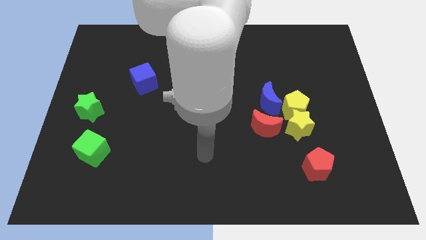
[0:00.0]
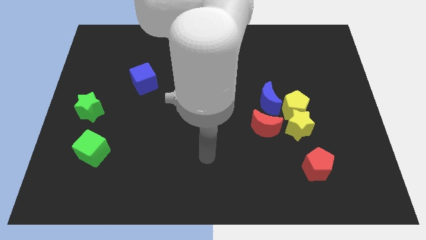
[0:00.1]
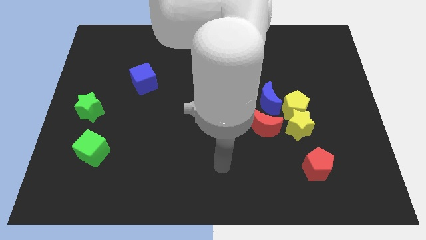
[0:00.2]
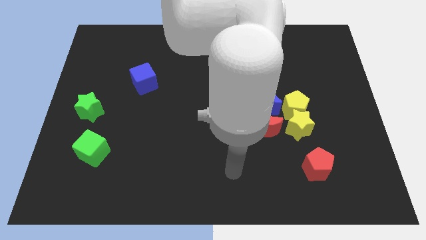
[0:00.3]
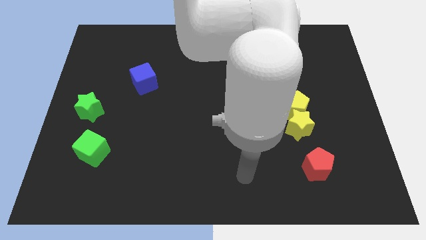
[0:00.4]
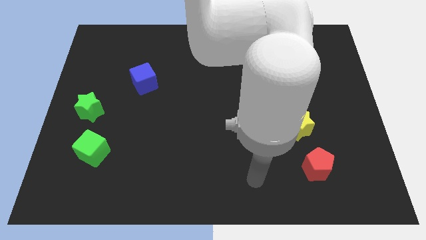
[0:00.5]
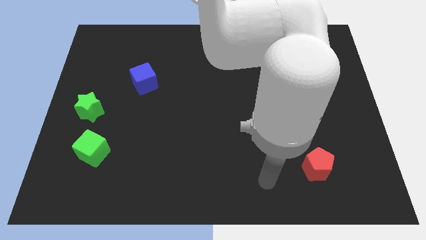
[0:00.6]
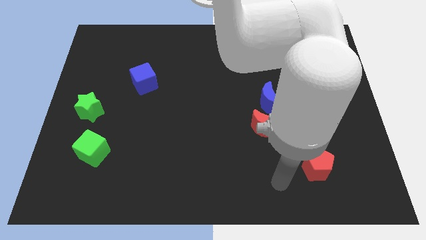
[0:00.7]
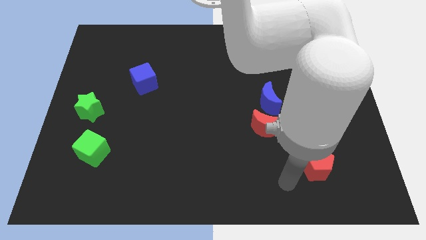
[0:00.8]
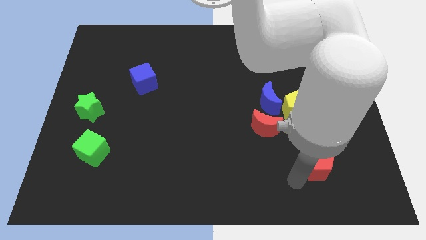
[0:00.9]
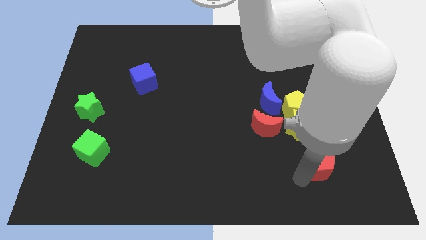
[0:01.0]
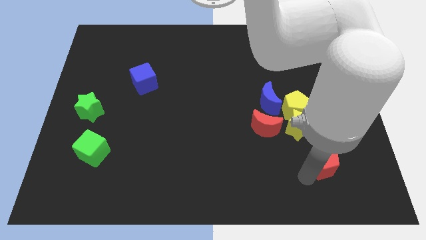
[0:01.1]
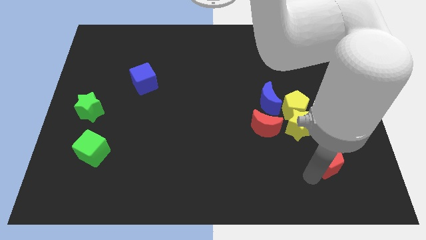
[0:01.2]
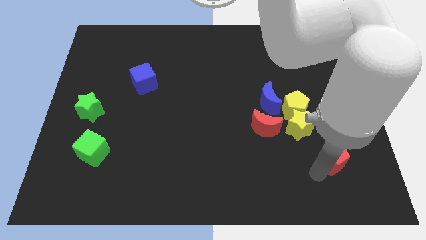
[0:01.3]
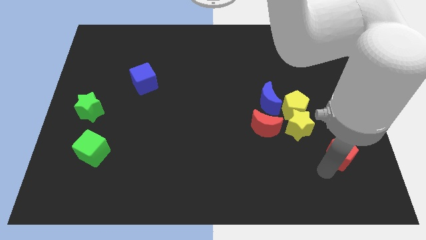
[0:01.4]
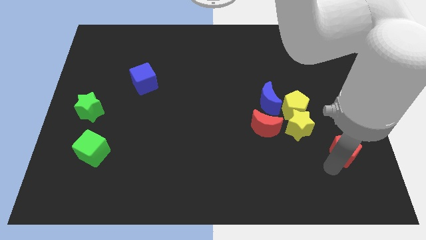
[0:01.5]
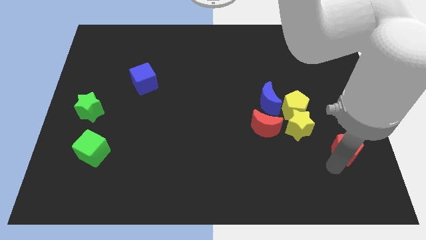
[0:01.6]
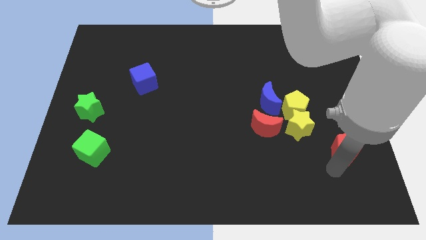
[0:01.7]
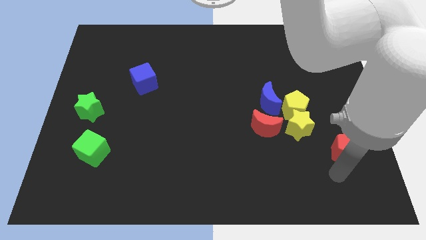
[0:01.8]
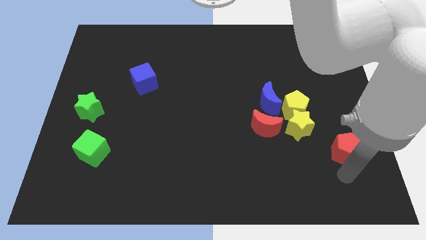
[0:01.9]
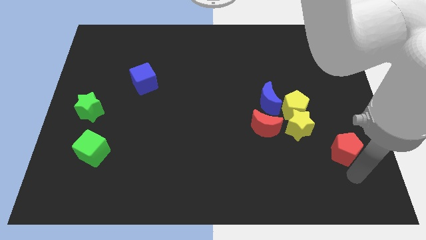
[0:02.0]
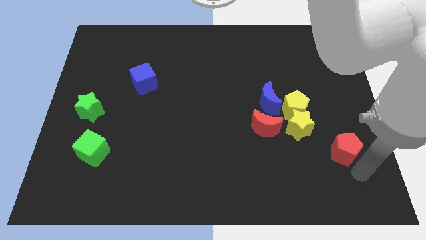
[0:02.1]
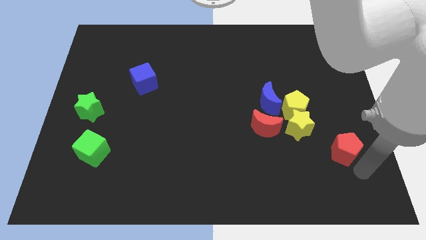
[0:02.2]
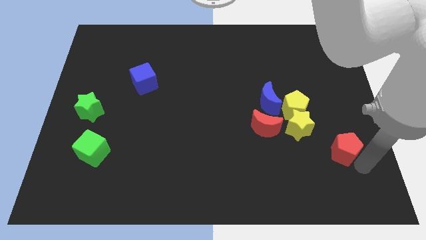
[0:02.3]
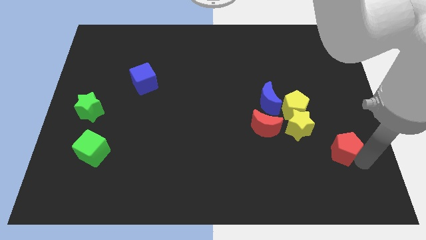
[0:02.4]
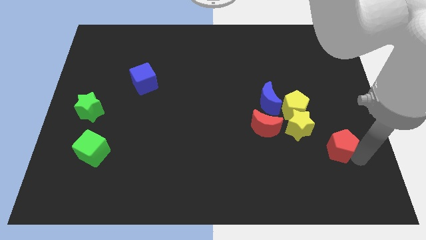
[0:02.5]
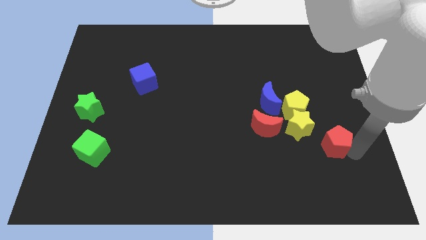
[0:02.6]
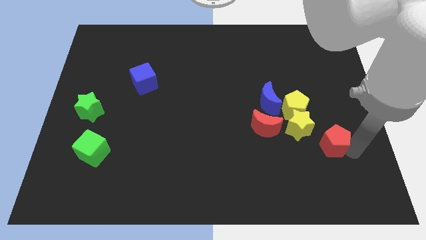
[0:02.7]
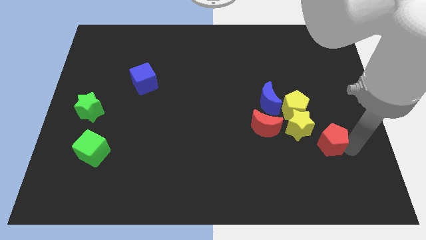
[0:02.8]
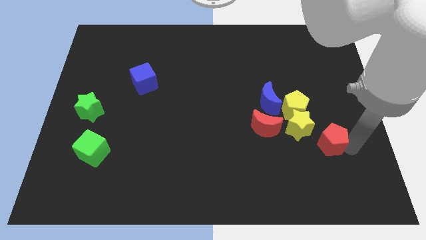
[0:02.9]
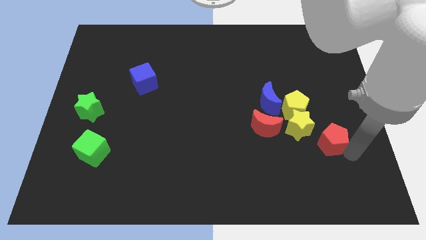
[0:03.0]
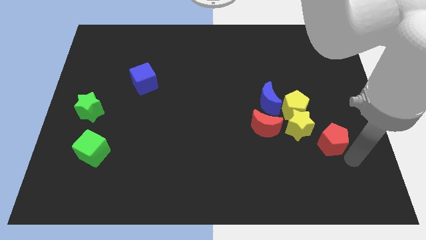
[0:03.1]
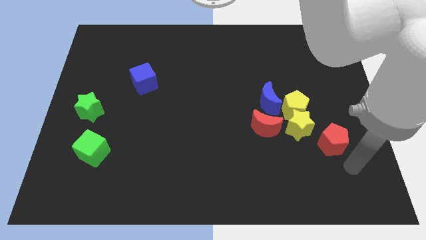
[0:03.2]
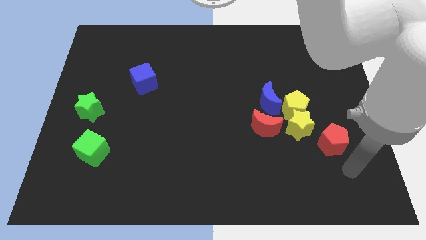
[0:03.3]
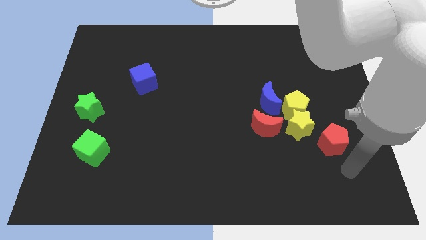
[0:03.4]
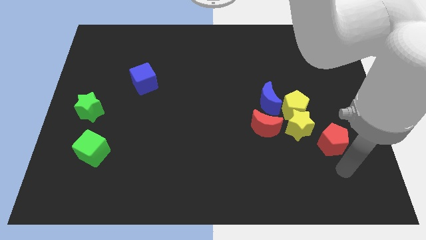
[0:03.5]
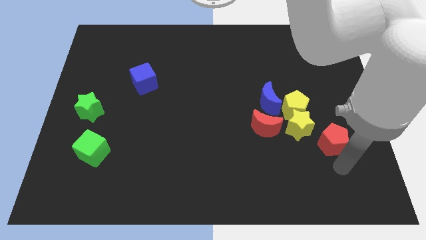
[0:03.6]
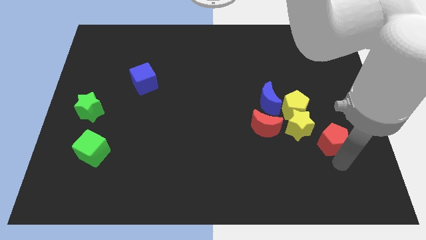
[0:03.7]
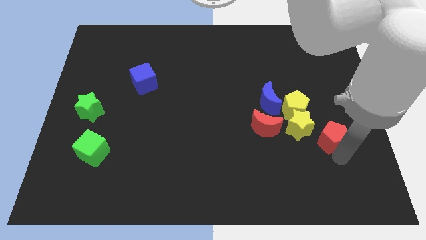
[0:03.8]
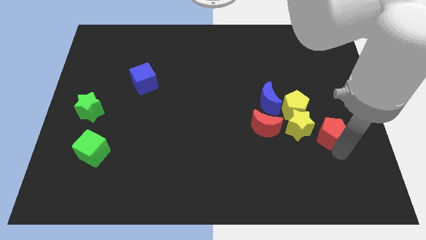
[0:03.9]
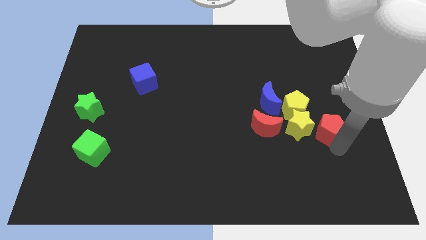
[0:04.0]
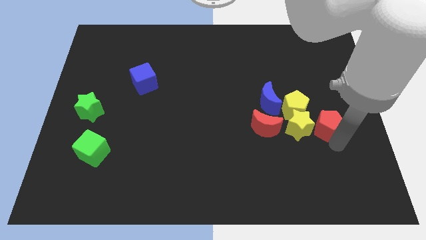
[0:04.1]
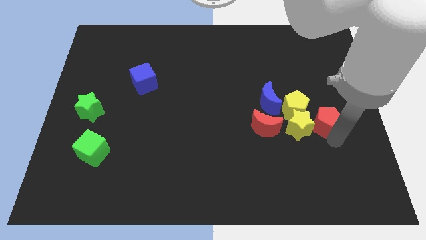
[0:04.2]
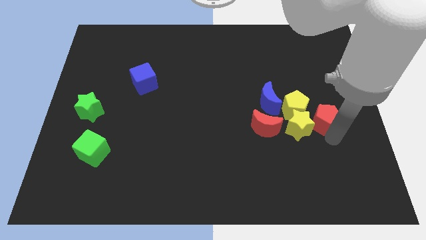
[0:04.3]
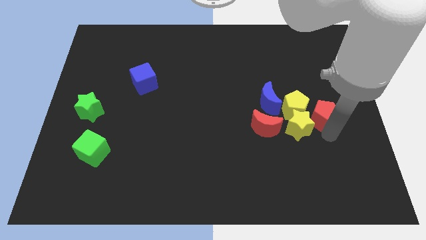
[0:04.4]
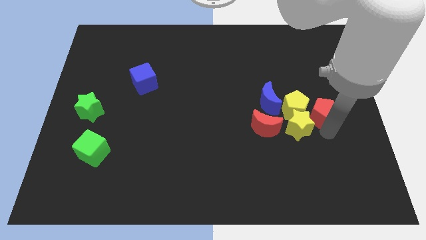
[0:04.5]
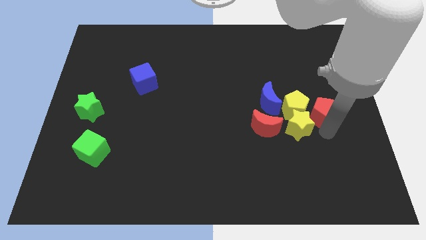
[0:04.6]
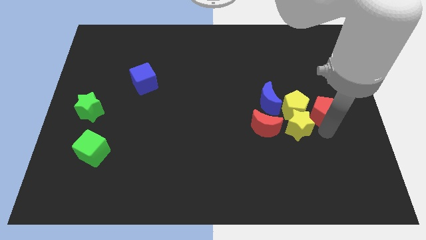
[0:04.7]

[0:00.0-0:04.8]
slide the red pentagon close to the yellow pentagon

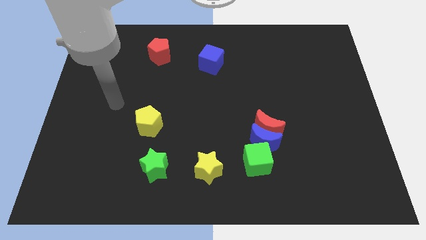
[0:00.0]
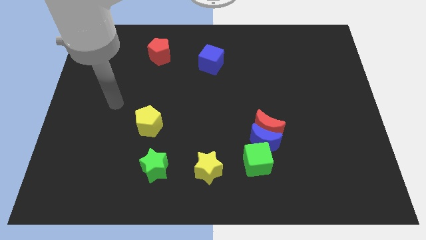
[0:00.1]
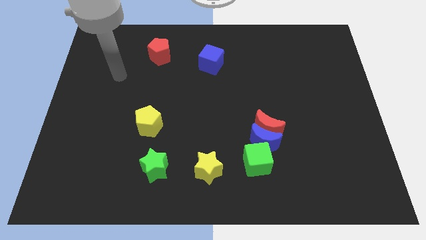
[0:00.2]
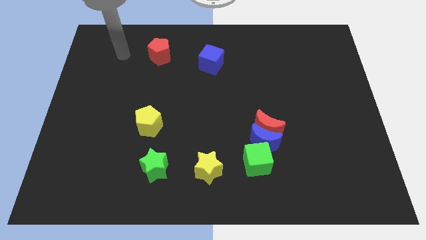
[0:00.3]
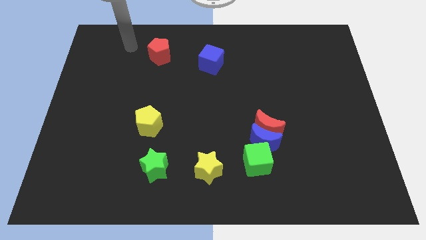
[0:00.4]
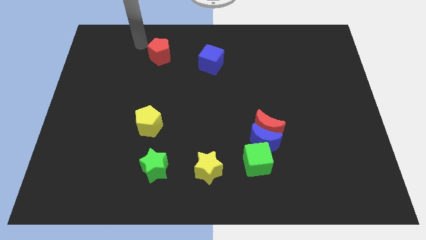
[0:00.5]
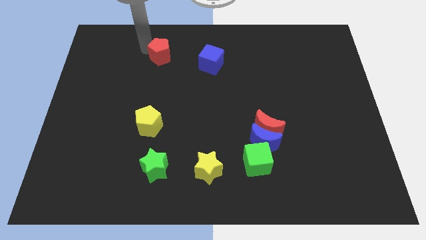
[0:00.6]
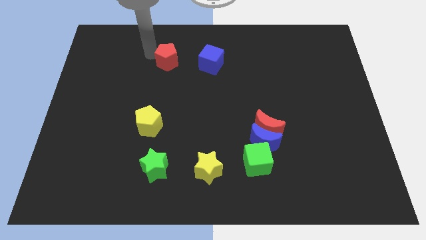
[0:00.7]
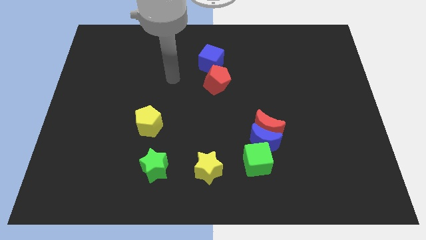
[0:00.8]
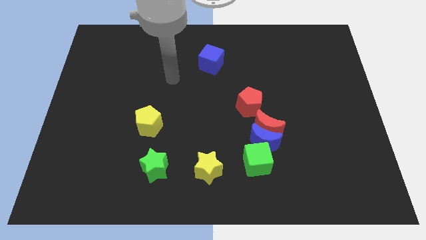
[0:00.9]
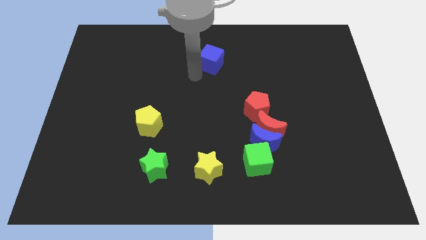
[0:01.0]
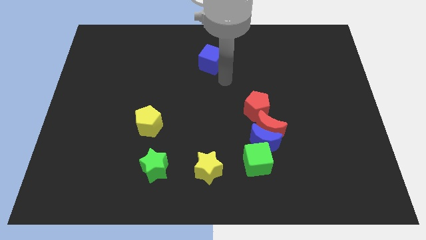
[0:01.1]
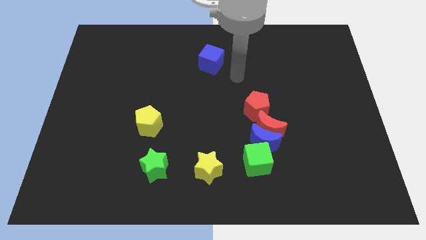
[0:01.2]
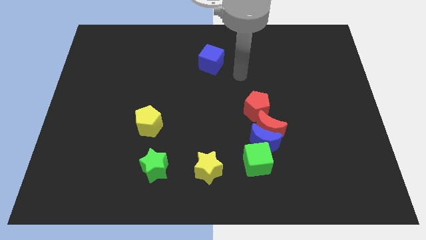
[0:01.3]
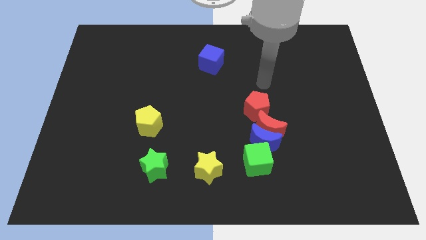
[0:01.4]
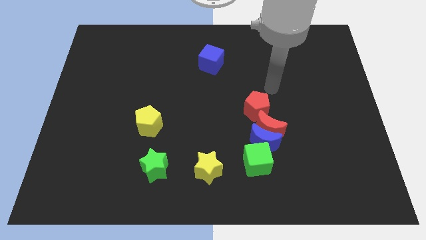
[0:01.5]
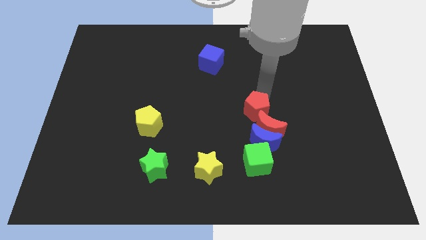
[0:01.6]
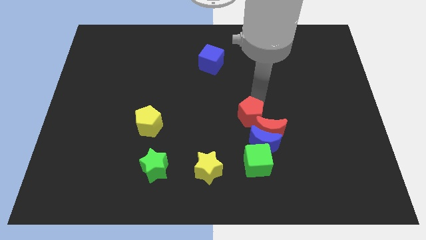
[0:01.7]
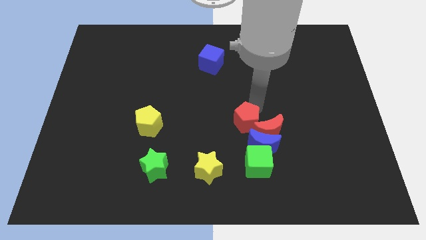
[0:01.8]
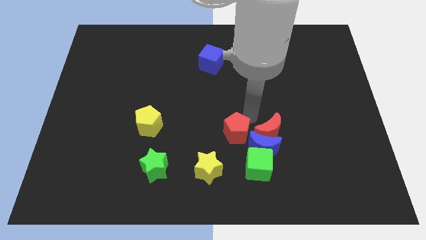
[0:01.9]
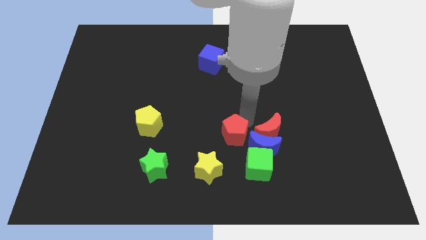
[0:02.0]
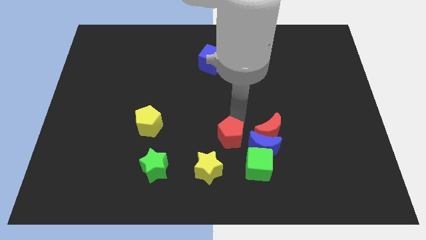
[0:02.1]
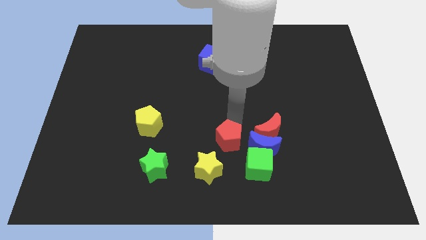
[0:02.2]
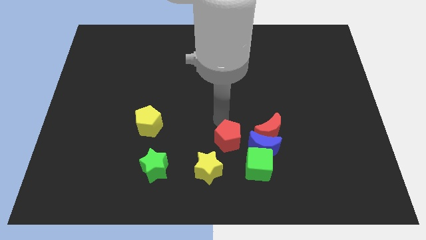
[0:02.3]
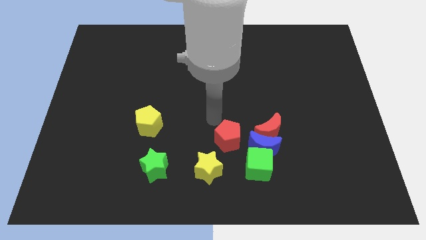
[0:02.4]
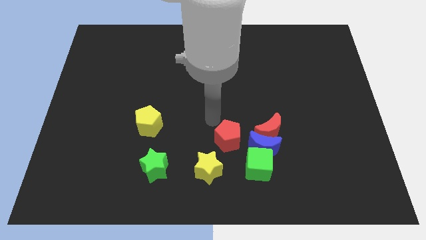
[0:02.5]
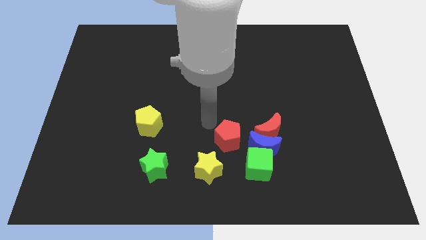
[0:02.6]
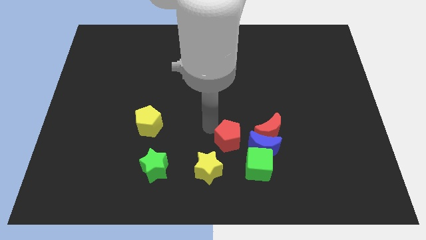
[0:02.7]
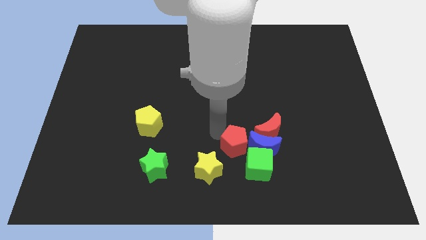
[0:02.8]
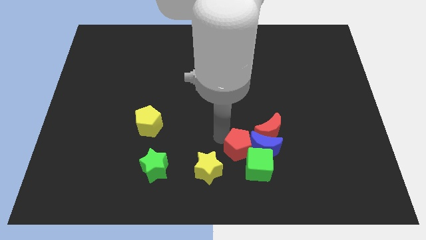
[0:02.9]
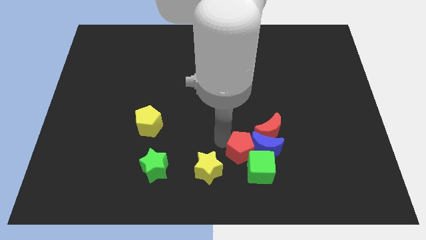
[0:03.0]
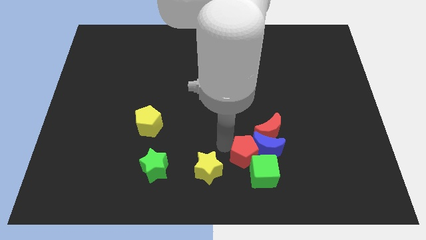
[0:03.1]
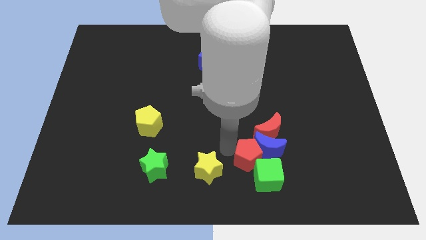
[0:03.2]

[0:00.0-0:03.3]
move the red pentagon next to the green cube

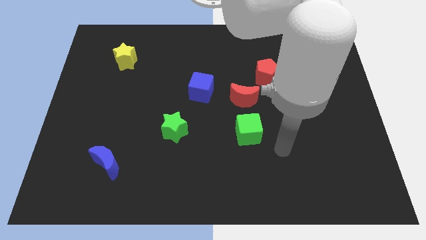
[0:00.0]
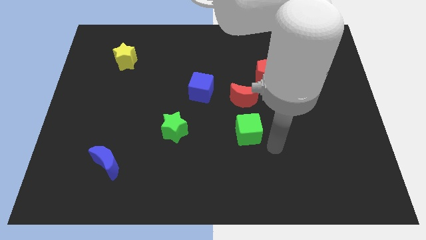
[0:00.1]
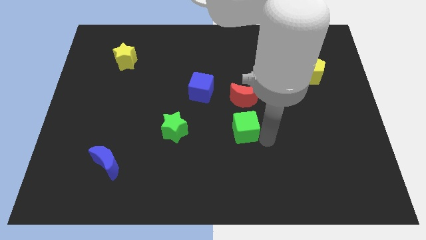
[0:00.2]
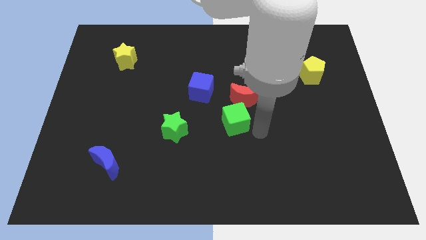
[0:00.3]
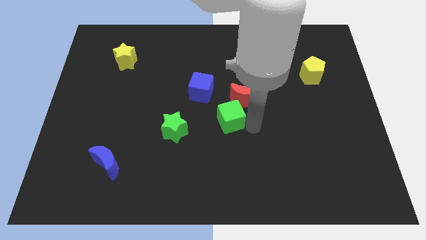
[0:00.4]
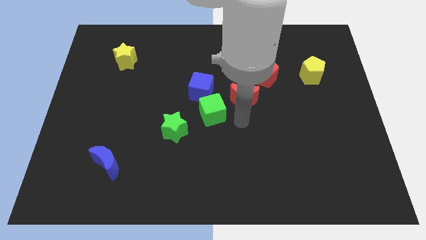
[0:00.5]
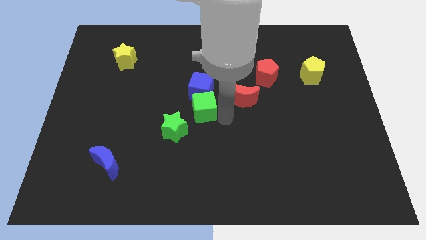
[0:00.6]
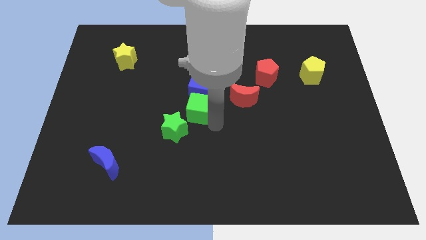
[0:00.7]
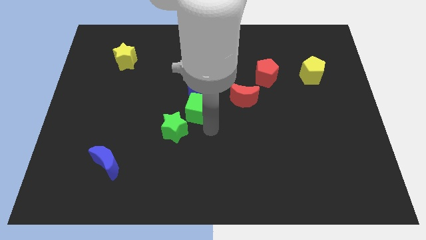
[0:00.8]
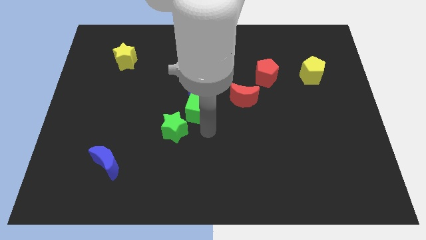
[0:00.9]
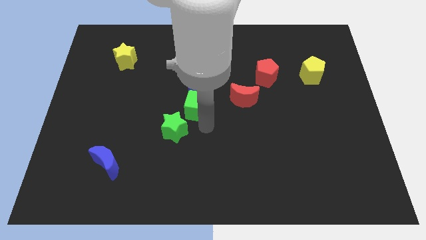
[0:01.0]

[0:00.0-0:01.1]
move the green cube to the blue cube
